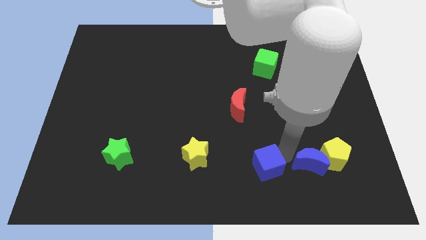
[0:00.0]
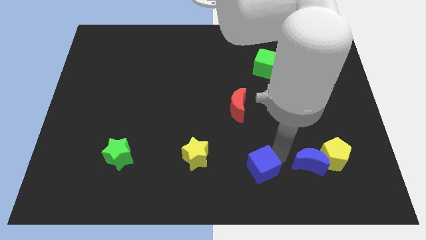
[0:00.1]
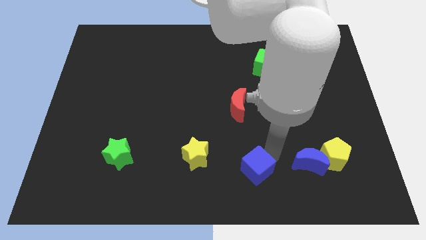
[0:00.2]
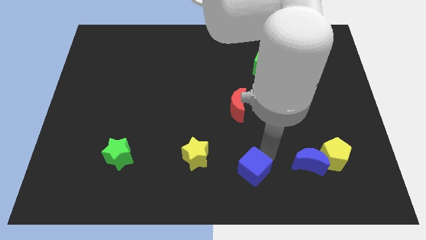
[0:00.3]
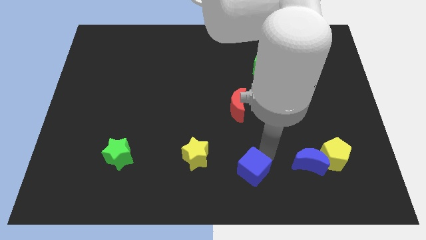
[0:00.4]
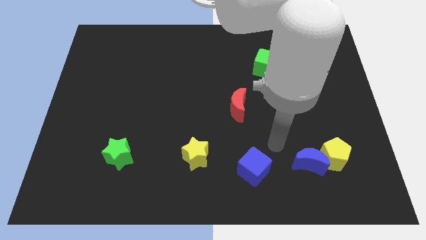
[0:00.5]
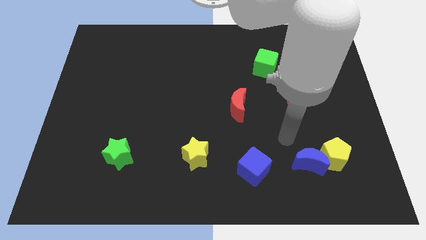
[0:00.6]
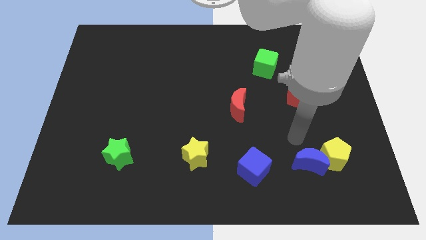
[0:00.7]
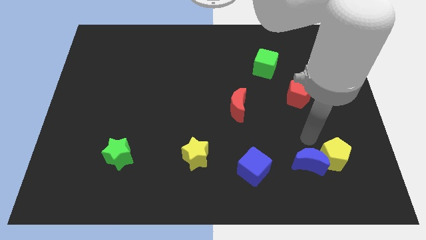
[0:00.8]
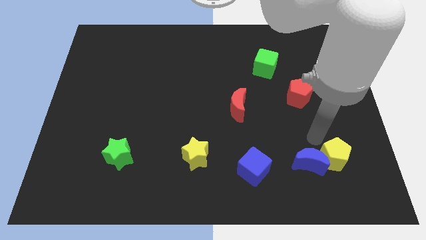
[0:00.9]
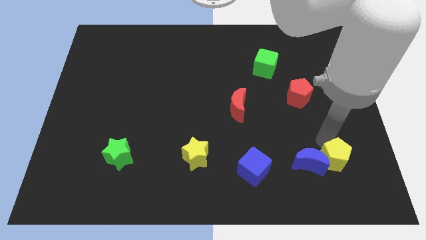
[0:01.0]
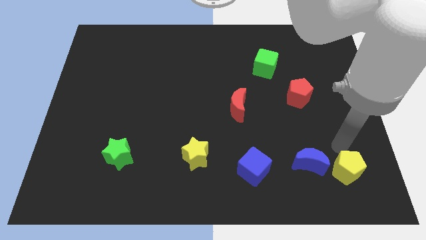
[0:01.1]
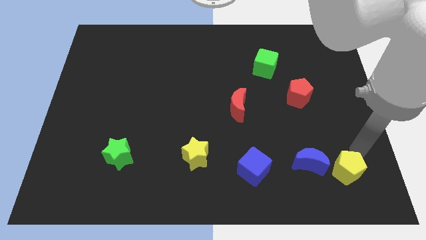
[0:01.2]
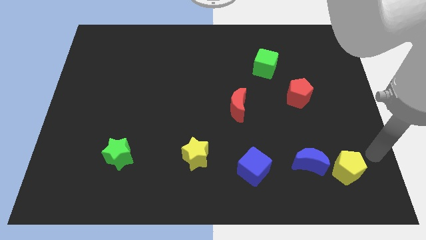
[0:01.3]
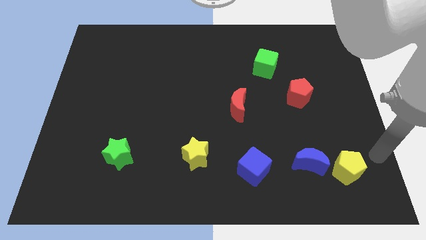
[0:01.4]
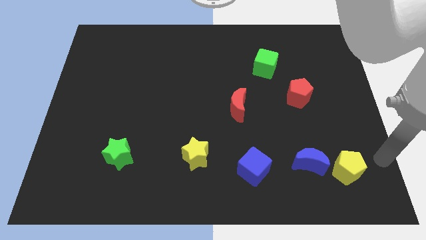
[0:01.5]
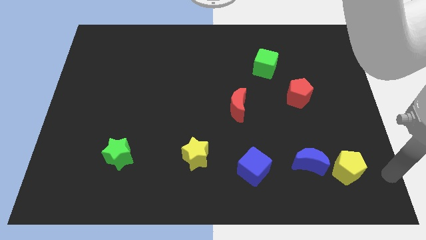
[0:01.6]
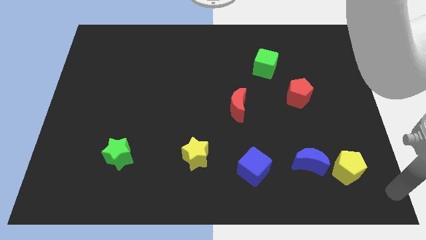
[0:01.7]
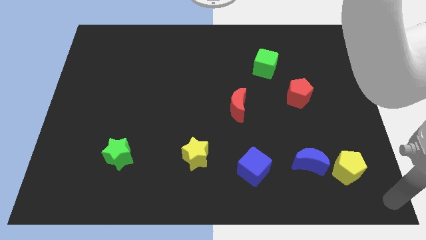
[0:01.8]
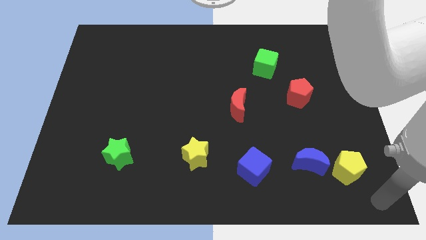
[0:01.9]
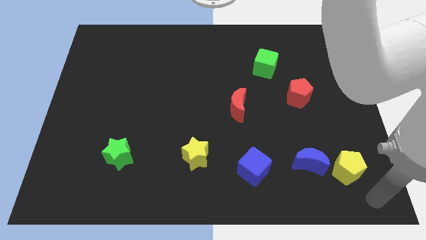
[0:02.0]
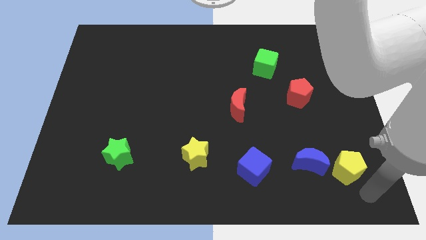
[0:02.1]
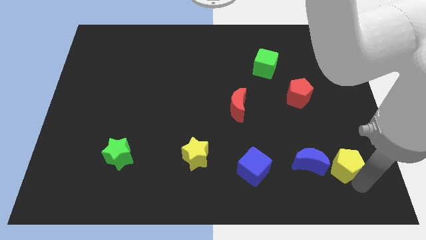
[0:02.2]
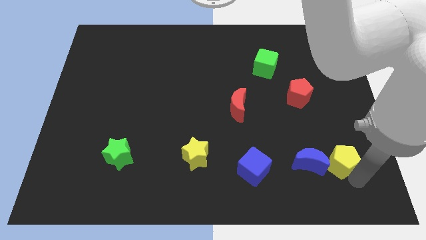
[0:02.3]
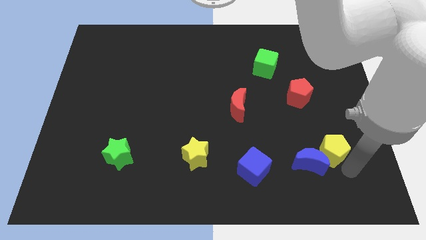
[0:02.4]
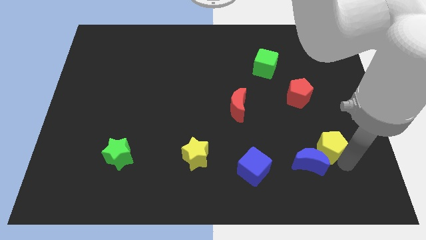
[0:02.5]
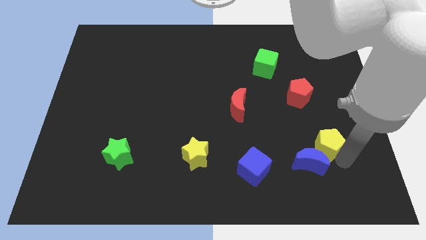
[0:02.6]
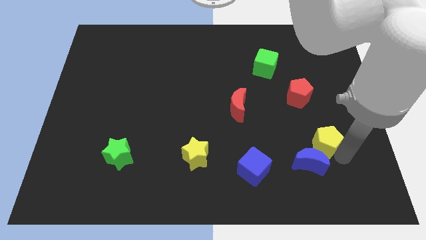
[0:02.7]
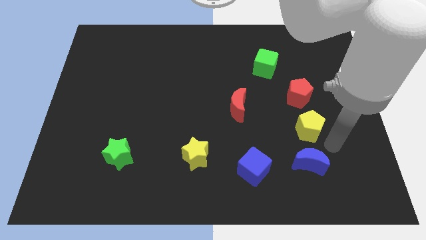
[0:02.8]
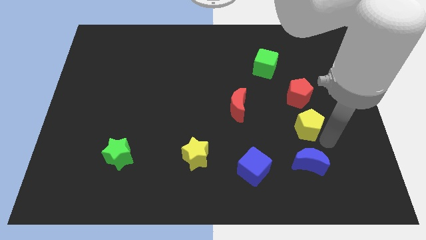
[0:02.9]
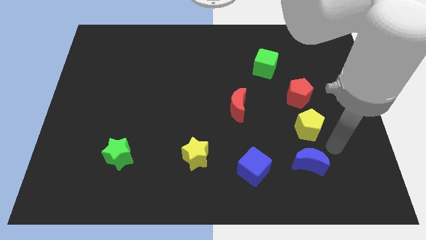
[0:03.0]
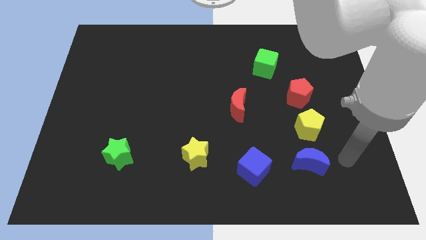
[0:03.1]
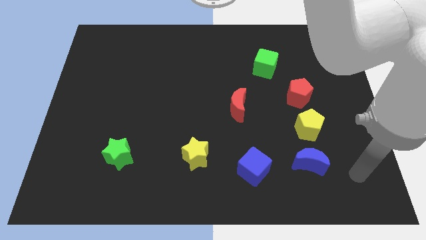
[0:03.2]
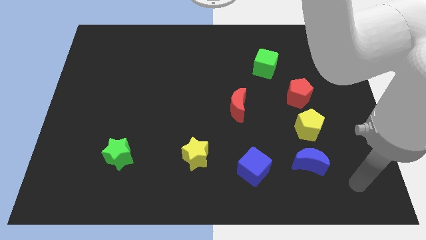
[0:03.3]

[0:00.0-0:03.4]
move the yellow pentagon above to the blue crescent

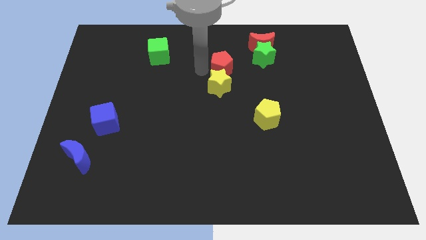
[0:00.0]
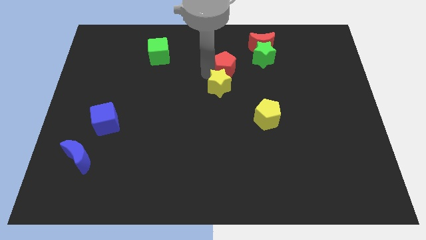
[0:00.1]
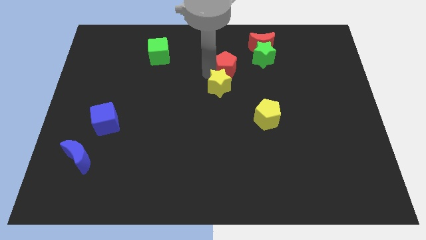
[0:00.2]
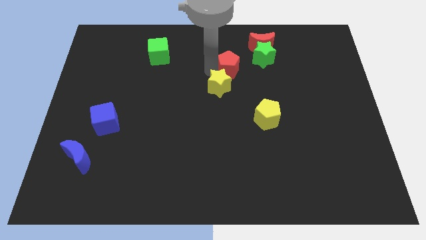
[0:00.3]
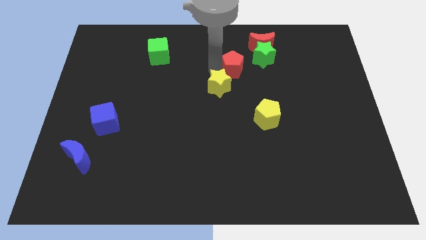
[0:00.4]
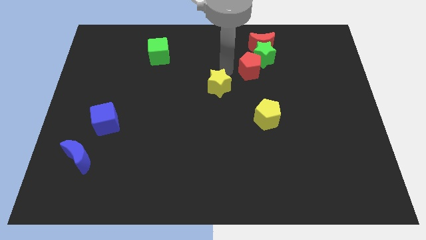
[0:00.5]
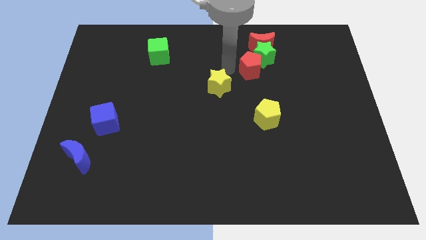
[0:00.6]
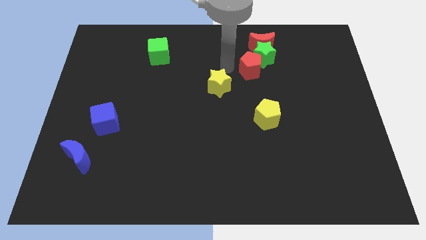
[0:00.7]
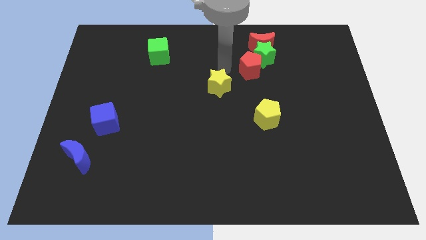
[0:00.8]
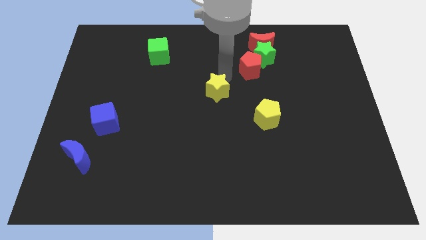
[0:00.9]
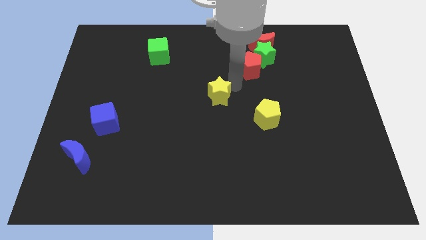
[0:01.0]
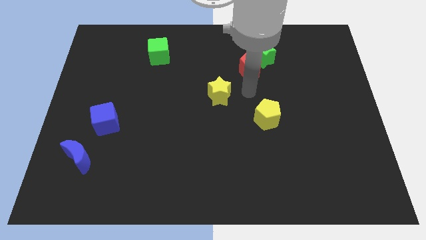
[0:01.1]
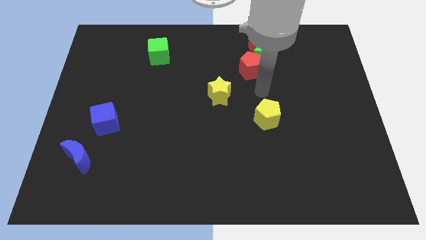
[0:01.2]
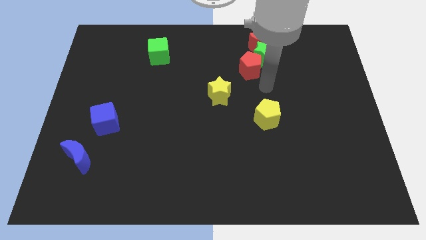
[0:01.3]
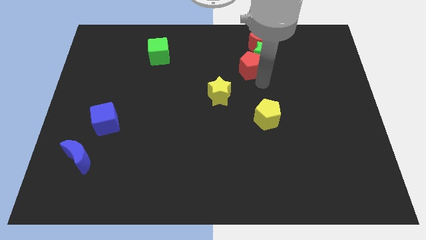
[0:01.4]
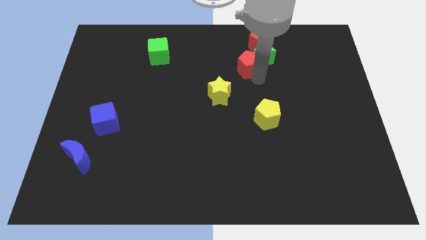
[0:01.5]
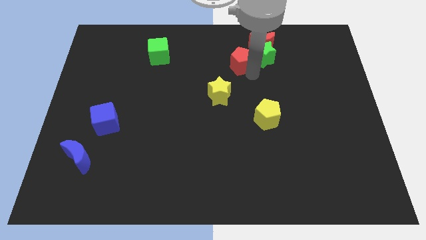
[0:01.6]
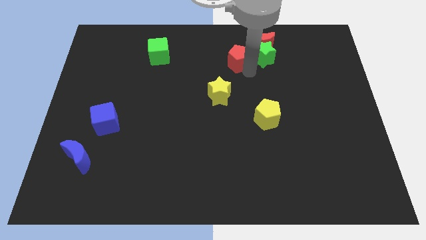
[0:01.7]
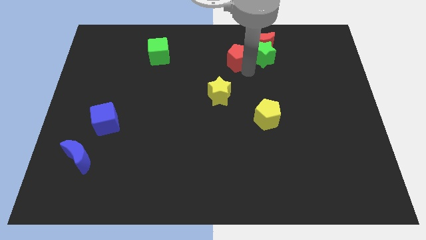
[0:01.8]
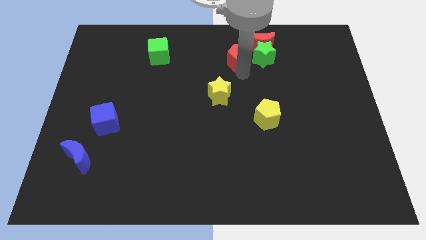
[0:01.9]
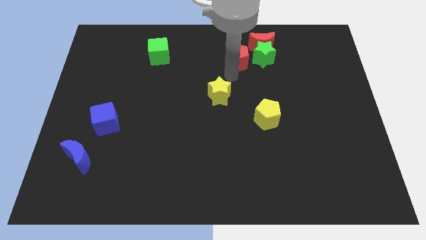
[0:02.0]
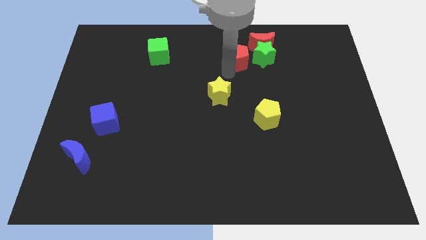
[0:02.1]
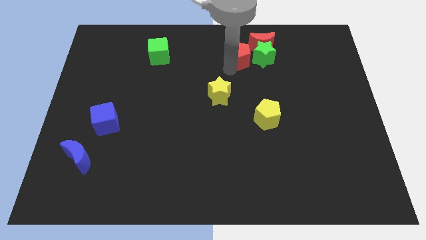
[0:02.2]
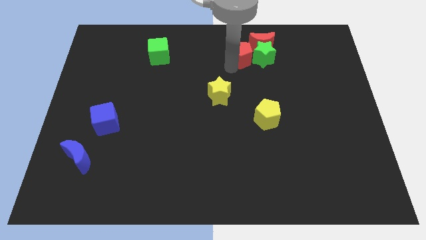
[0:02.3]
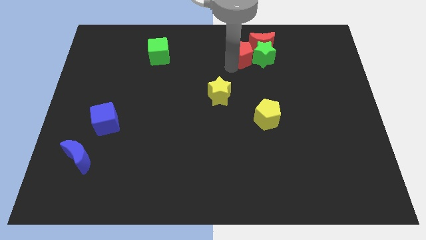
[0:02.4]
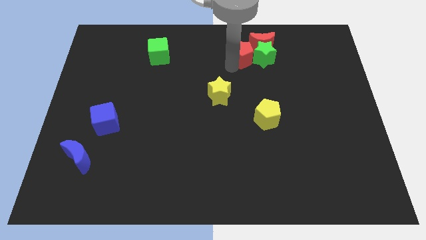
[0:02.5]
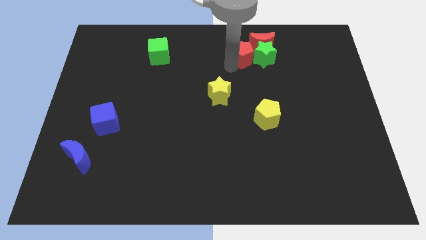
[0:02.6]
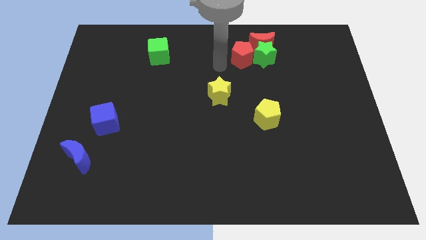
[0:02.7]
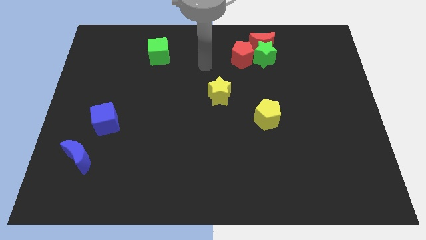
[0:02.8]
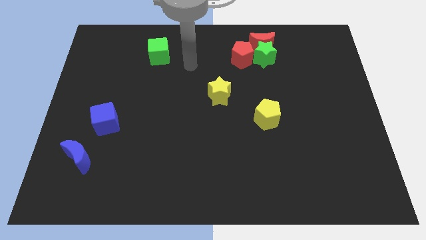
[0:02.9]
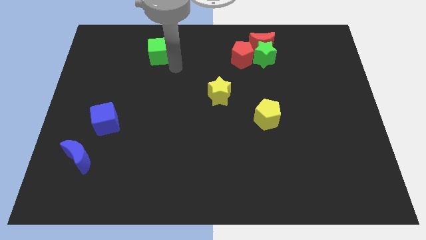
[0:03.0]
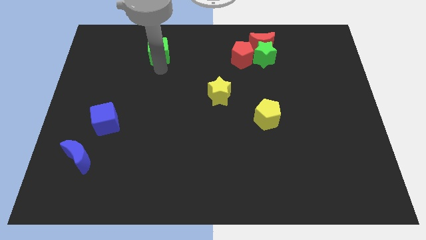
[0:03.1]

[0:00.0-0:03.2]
push red pentagon to the left of the green star

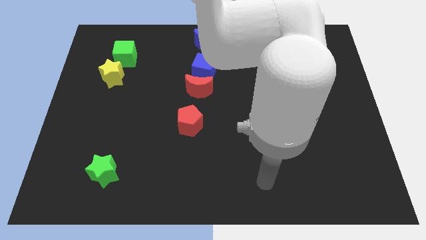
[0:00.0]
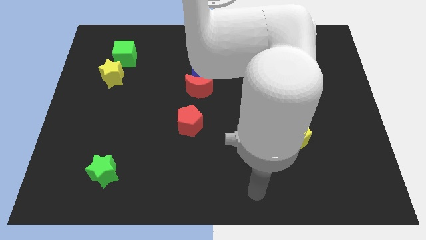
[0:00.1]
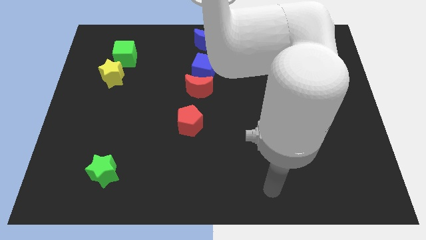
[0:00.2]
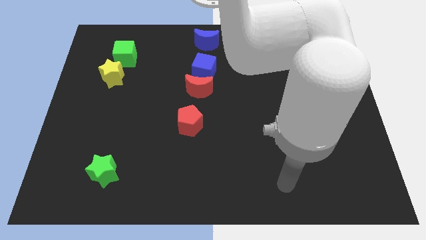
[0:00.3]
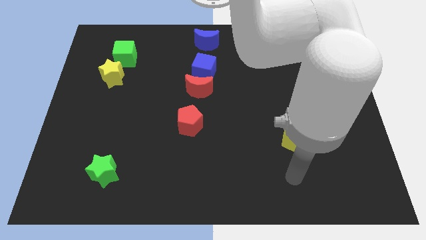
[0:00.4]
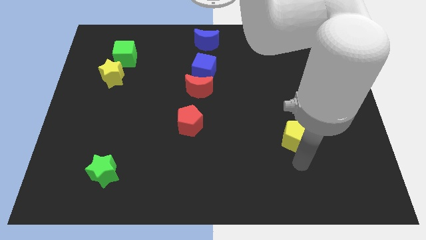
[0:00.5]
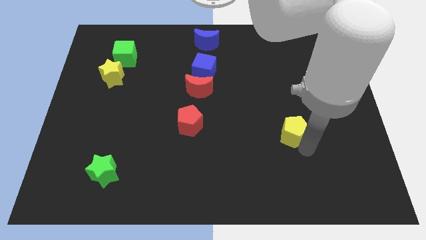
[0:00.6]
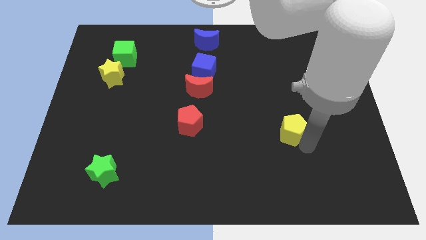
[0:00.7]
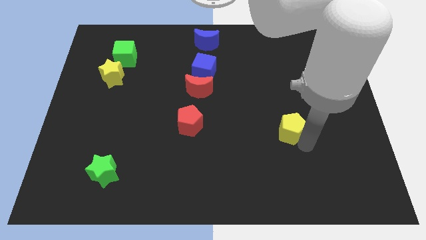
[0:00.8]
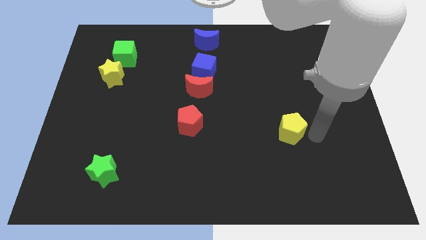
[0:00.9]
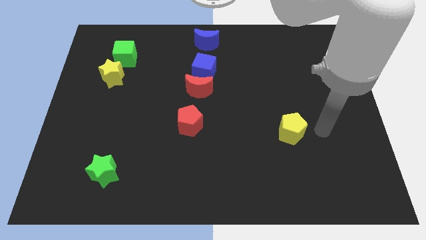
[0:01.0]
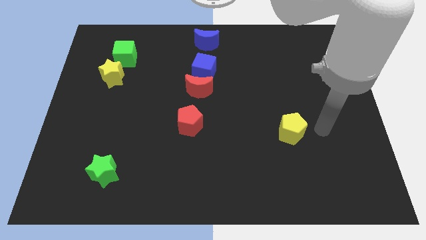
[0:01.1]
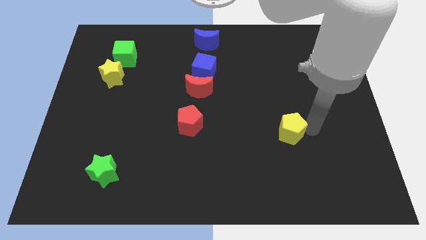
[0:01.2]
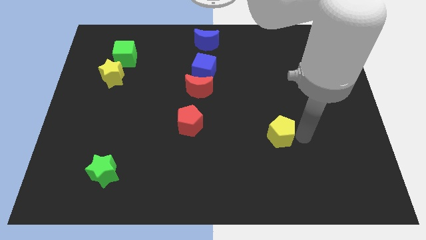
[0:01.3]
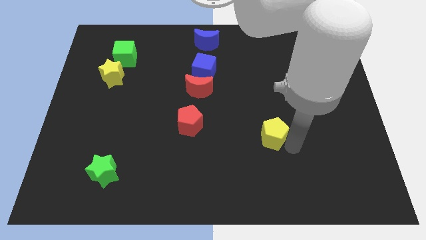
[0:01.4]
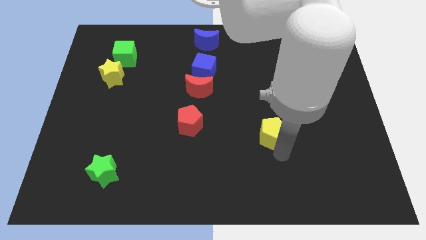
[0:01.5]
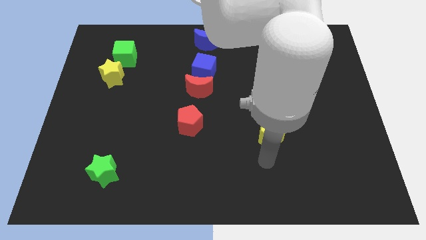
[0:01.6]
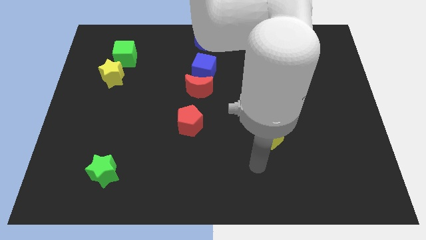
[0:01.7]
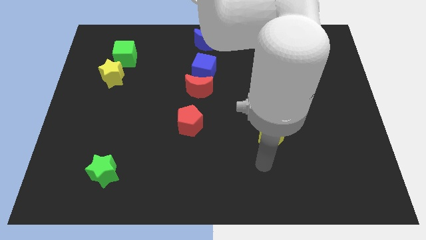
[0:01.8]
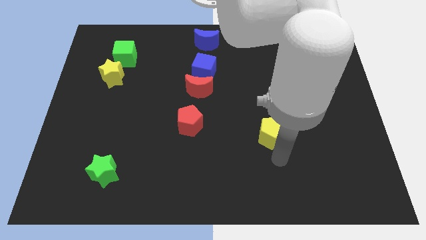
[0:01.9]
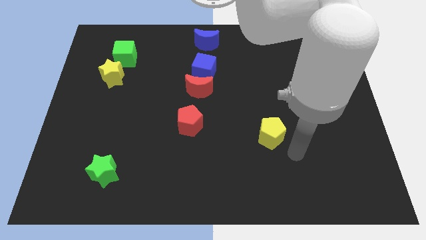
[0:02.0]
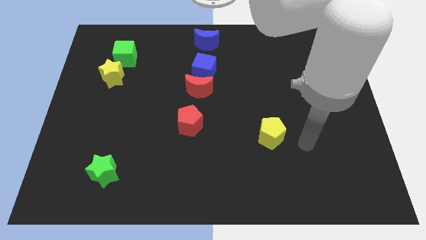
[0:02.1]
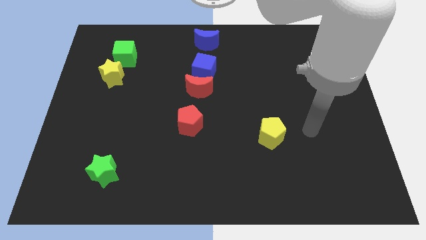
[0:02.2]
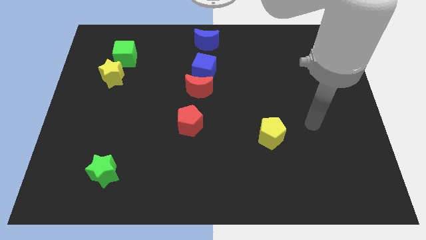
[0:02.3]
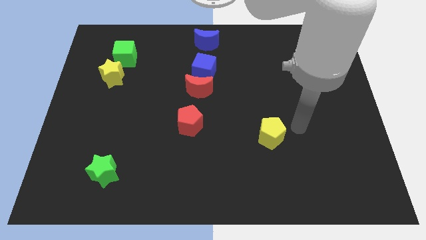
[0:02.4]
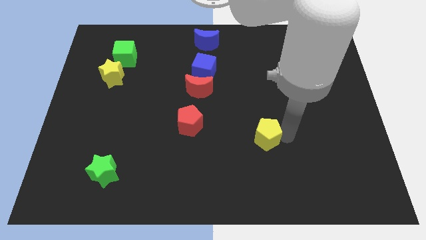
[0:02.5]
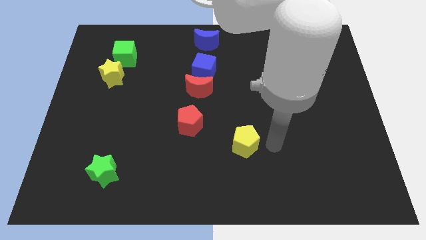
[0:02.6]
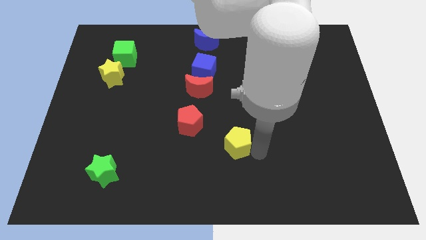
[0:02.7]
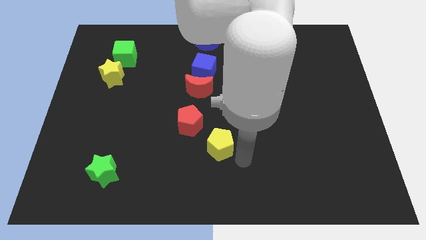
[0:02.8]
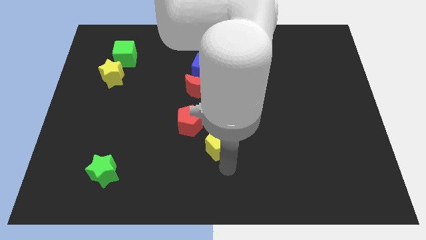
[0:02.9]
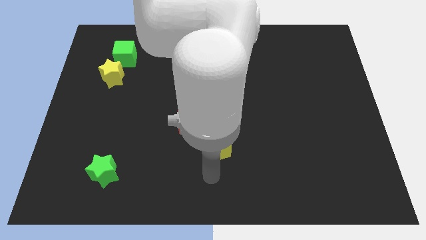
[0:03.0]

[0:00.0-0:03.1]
slightly move the yellow pentagon towards the right bottom of the red pentagon
